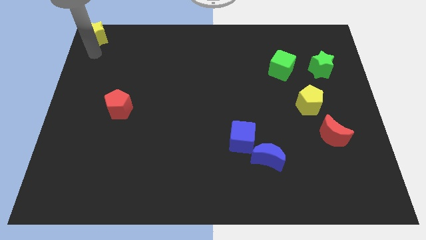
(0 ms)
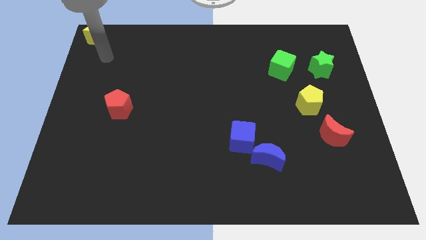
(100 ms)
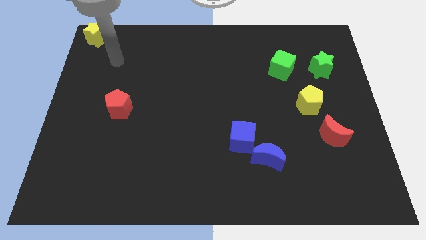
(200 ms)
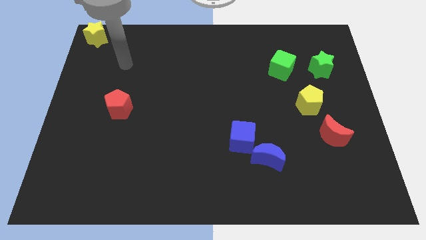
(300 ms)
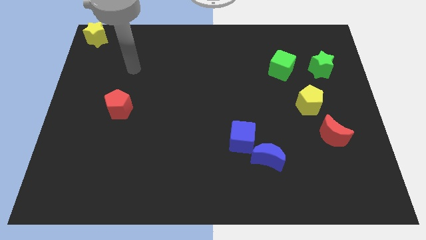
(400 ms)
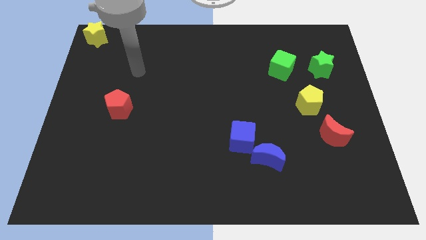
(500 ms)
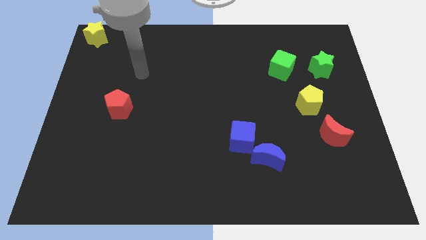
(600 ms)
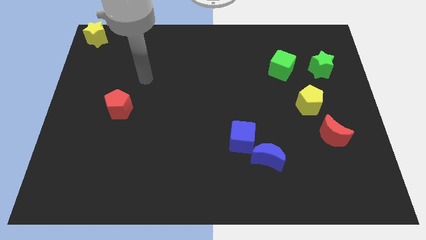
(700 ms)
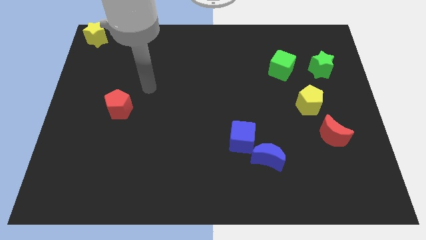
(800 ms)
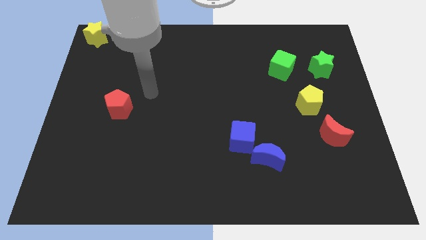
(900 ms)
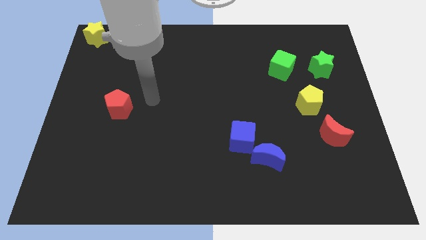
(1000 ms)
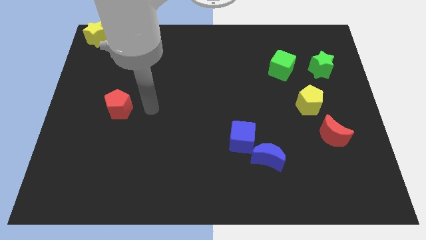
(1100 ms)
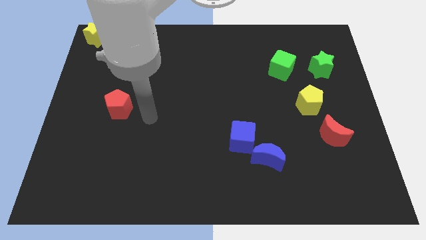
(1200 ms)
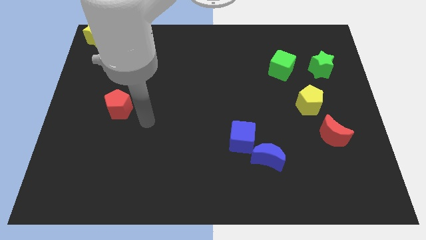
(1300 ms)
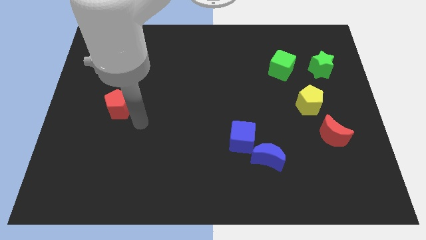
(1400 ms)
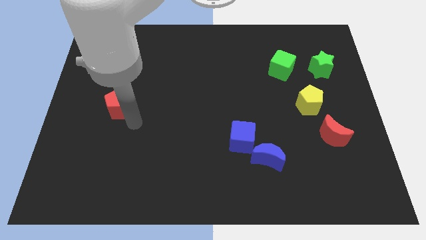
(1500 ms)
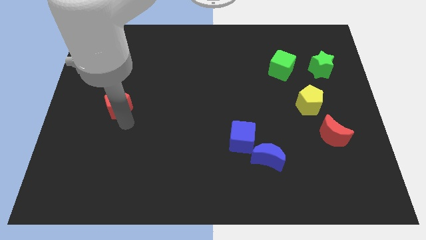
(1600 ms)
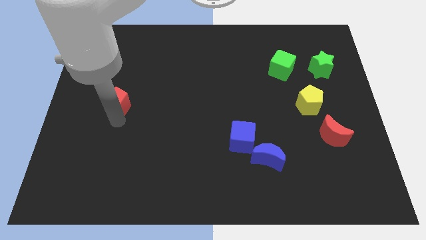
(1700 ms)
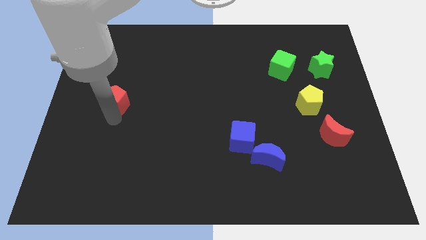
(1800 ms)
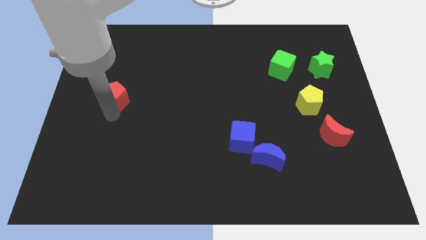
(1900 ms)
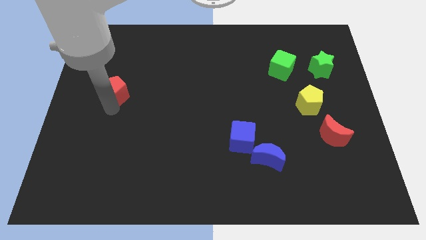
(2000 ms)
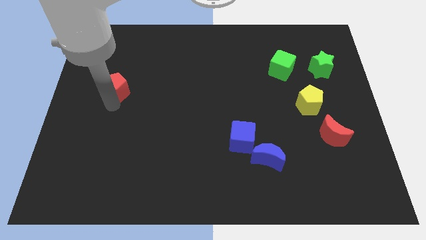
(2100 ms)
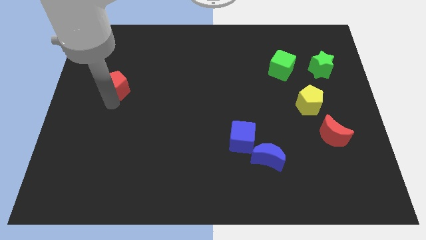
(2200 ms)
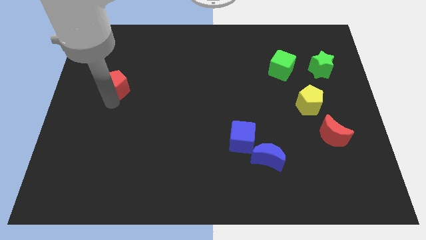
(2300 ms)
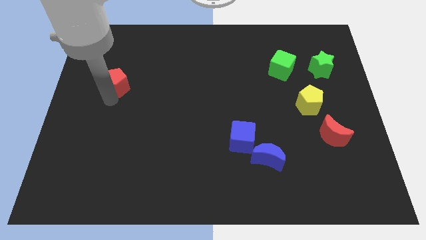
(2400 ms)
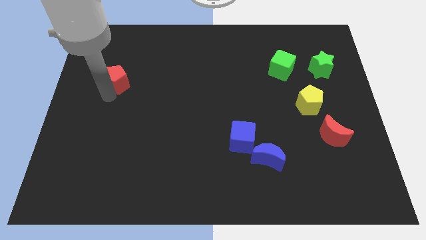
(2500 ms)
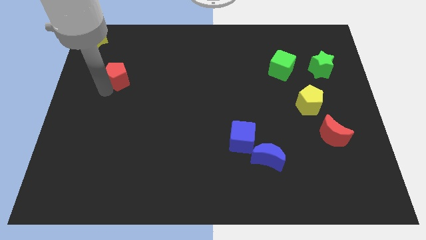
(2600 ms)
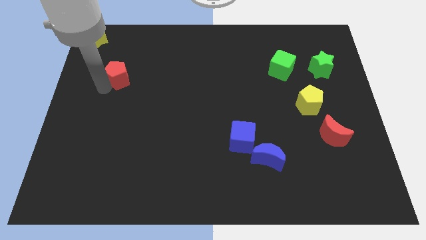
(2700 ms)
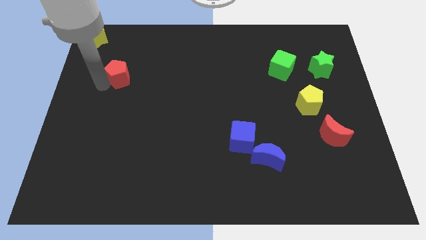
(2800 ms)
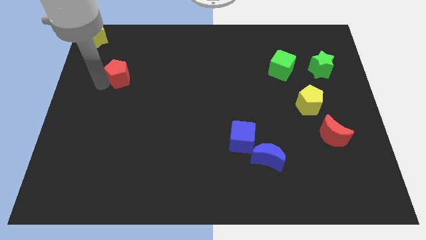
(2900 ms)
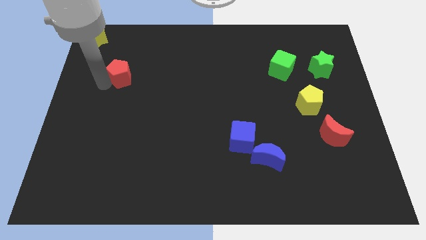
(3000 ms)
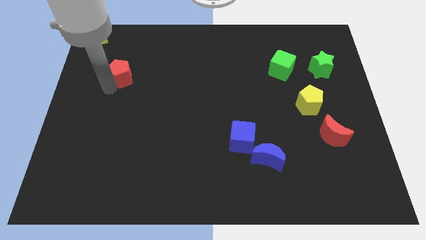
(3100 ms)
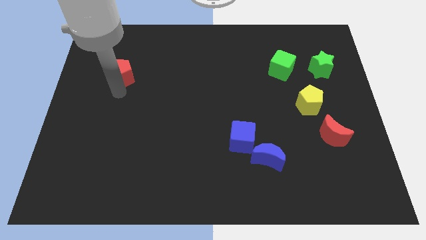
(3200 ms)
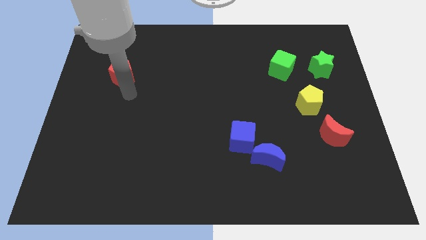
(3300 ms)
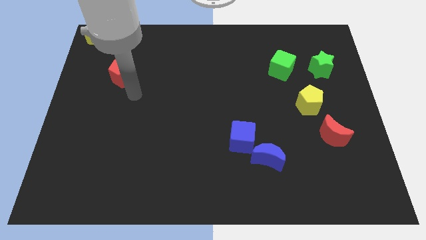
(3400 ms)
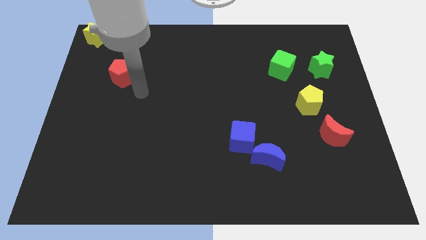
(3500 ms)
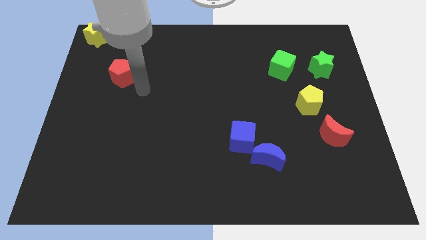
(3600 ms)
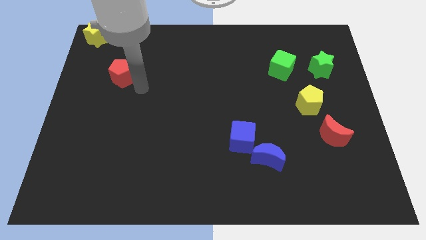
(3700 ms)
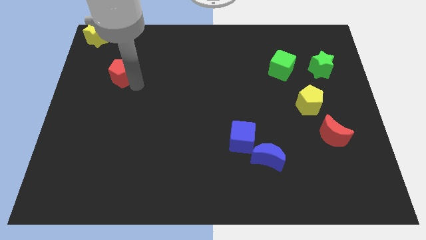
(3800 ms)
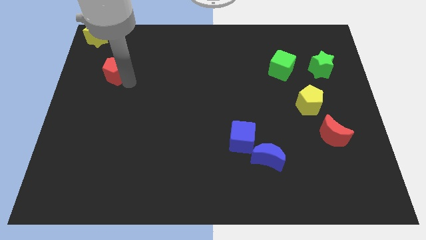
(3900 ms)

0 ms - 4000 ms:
put the red pentagon diagonally to yellow star

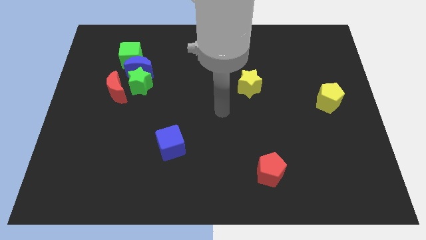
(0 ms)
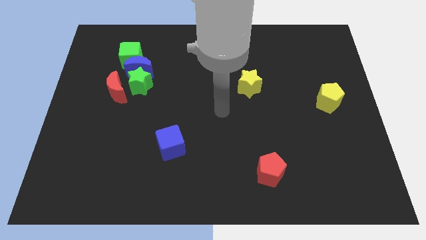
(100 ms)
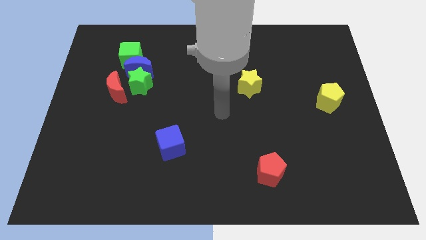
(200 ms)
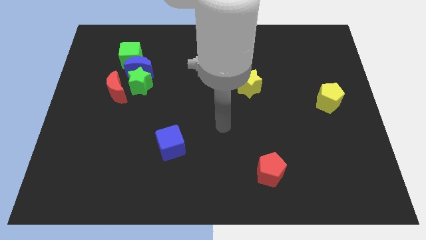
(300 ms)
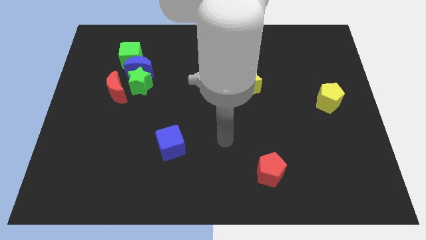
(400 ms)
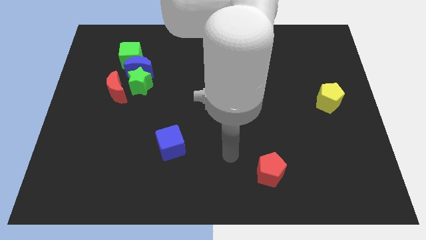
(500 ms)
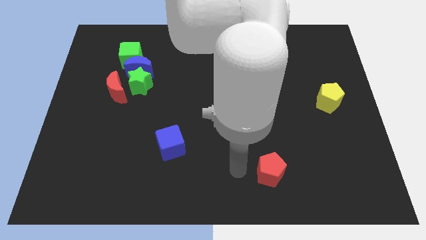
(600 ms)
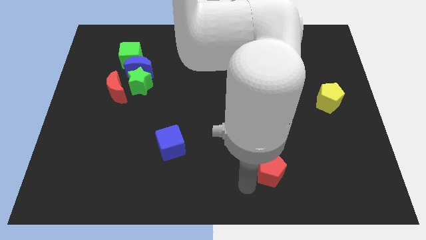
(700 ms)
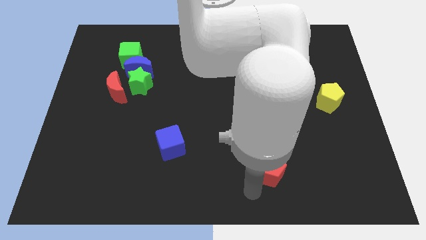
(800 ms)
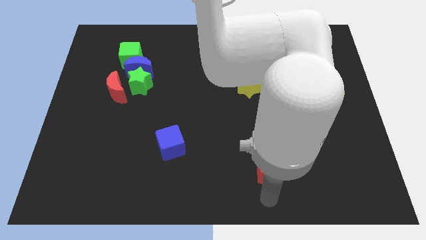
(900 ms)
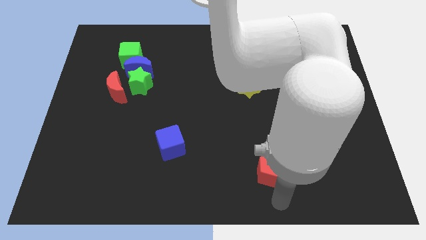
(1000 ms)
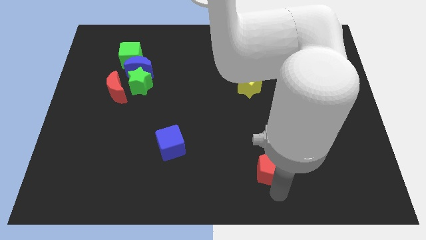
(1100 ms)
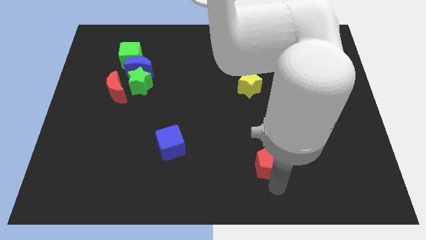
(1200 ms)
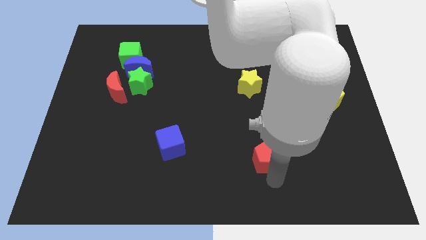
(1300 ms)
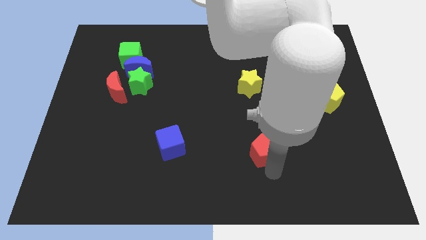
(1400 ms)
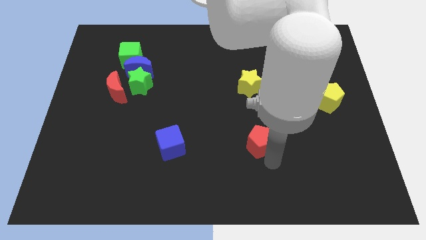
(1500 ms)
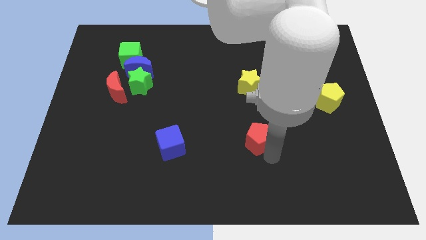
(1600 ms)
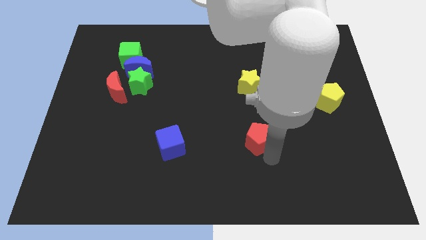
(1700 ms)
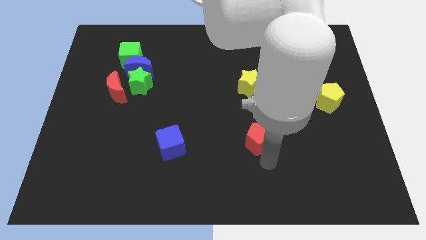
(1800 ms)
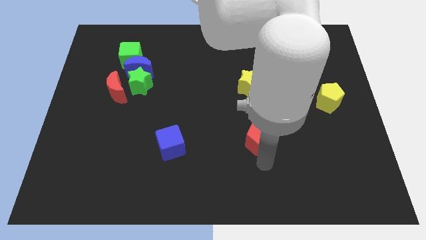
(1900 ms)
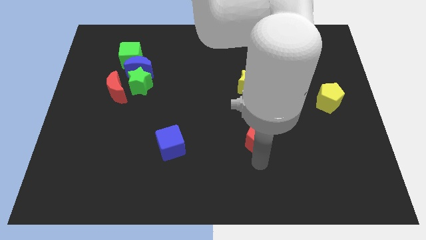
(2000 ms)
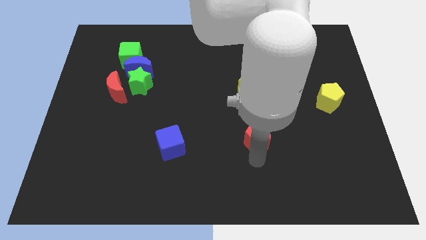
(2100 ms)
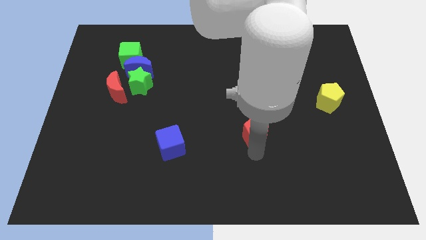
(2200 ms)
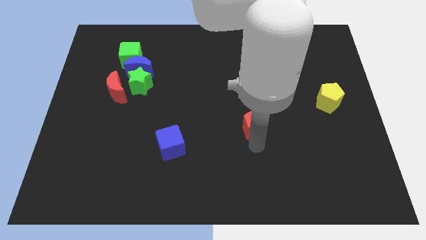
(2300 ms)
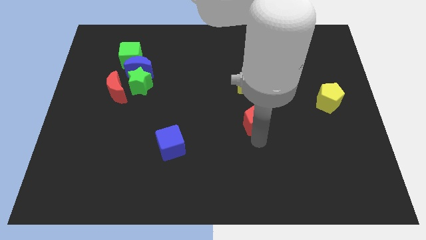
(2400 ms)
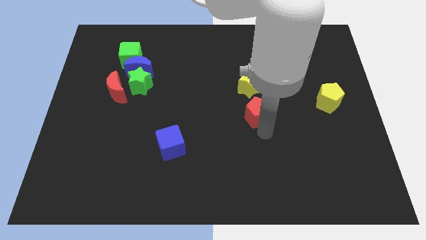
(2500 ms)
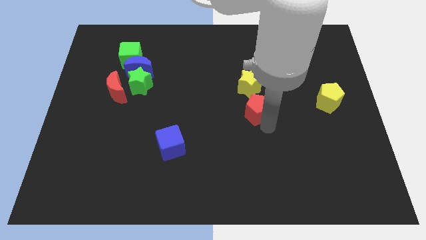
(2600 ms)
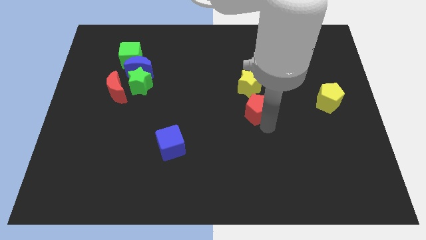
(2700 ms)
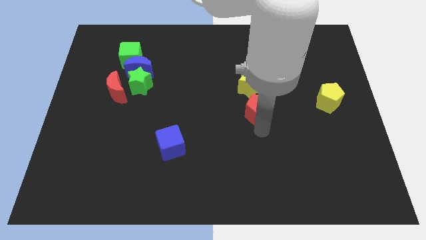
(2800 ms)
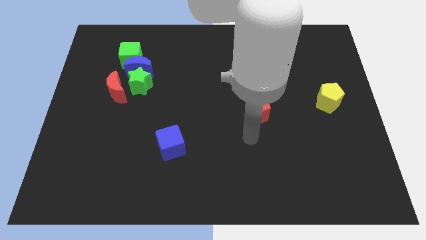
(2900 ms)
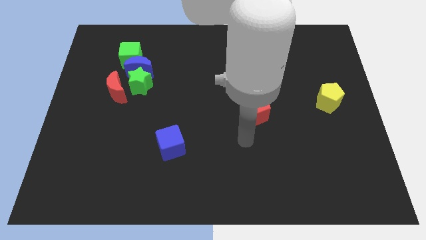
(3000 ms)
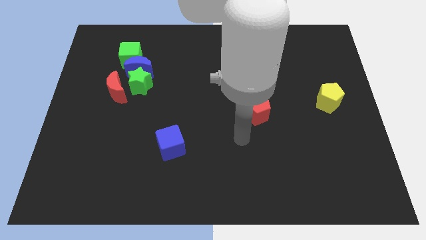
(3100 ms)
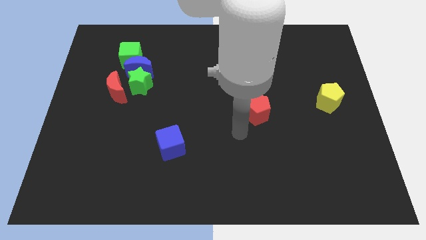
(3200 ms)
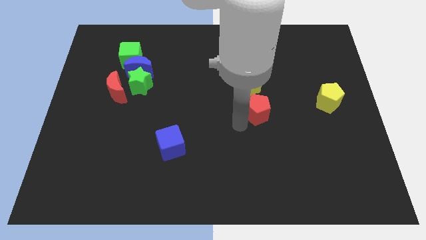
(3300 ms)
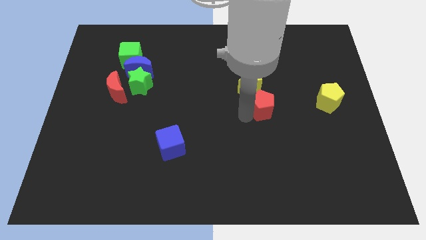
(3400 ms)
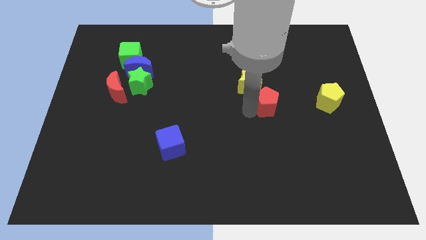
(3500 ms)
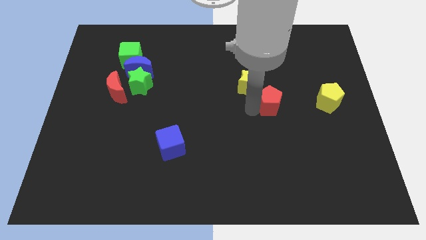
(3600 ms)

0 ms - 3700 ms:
push the red pentagon upwards

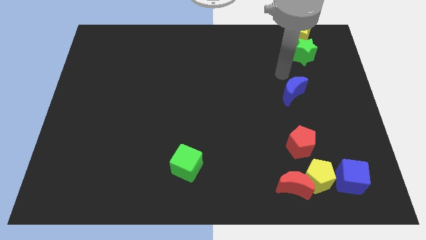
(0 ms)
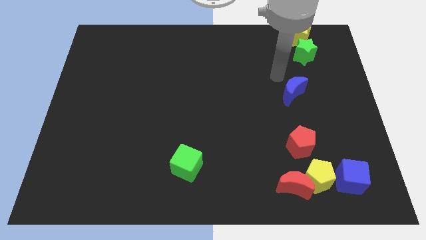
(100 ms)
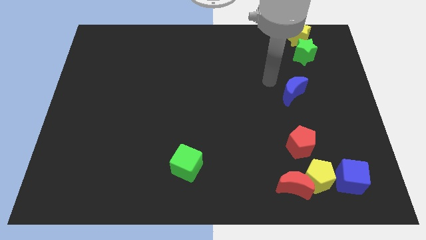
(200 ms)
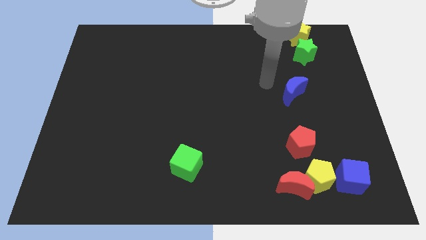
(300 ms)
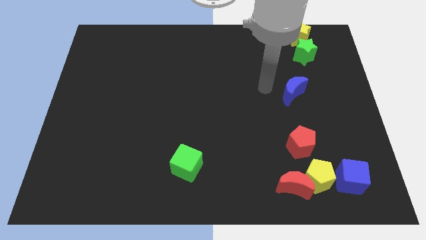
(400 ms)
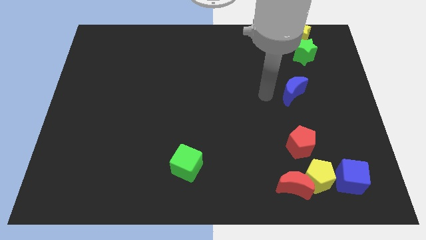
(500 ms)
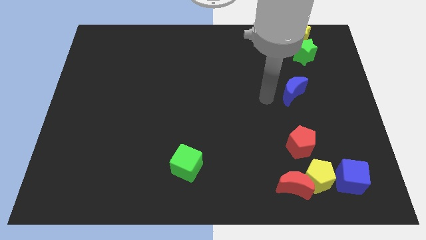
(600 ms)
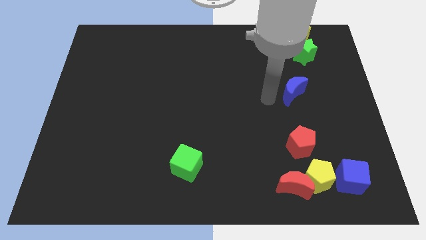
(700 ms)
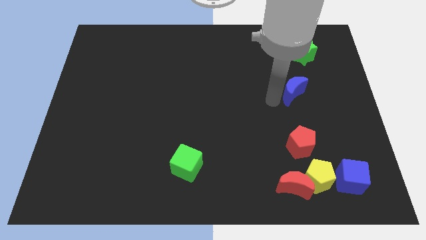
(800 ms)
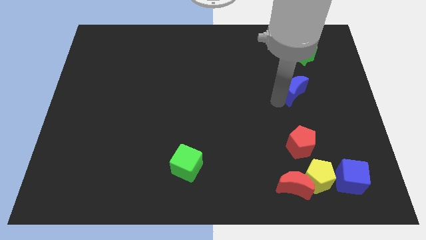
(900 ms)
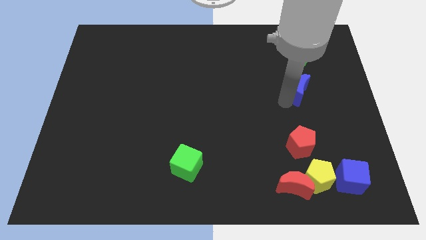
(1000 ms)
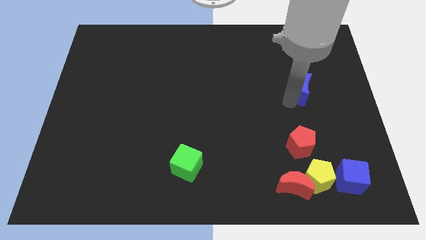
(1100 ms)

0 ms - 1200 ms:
touch the bottom of blue crescent
